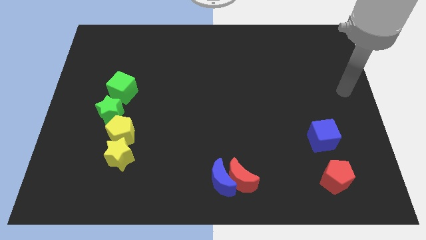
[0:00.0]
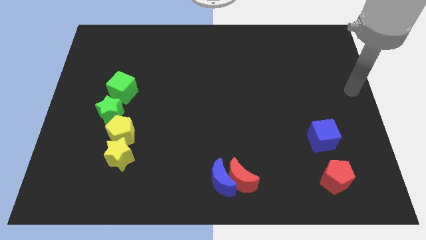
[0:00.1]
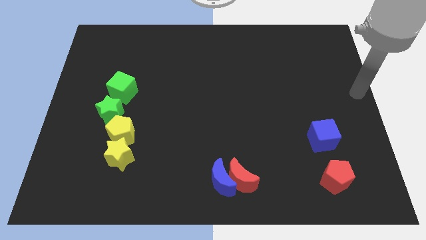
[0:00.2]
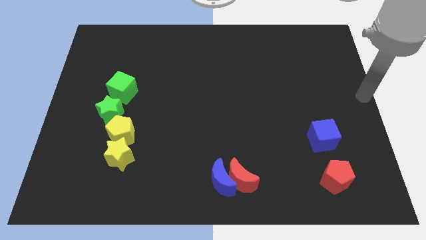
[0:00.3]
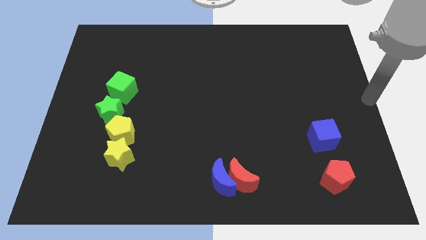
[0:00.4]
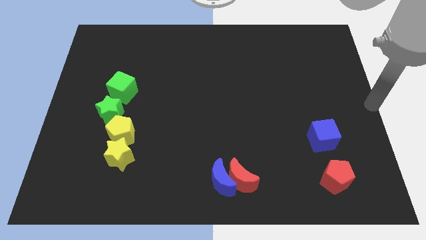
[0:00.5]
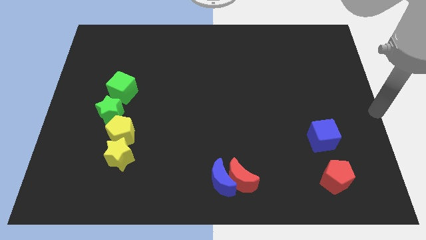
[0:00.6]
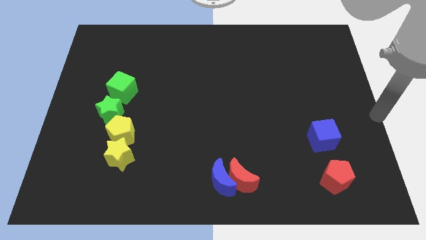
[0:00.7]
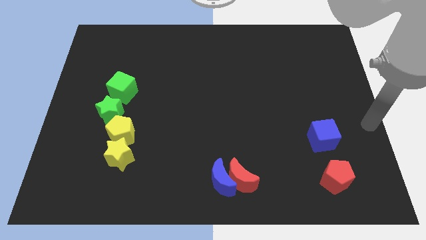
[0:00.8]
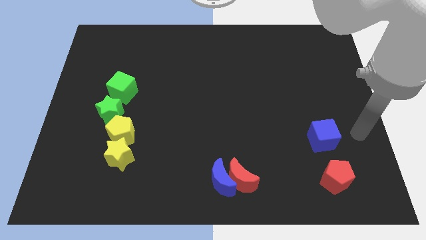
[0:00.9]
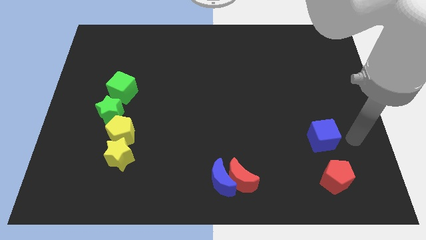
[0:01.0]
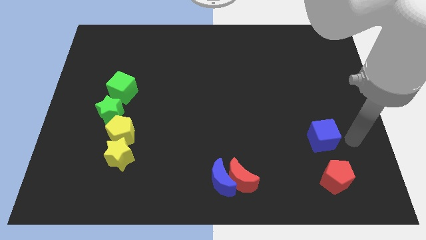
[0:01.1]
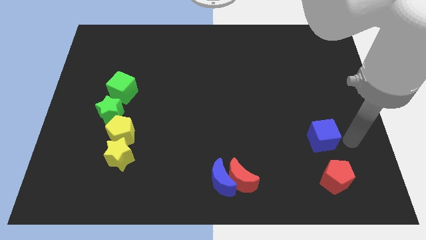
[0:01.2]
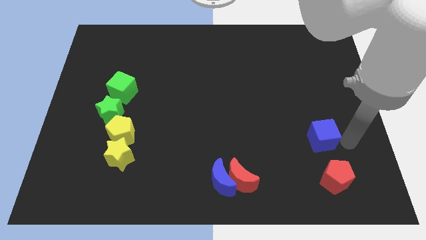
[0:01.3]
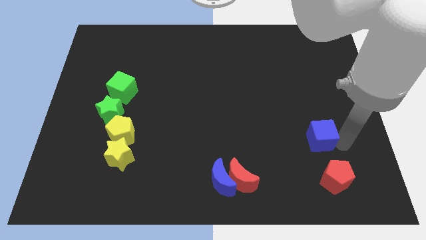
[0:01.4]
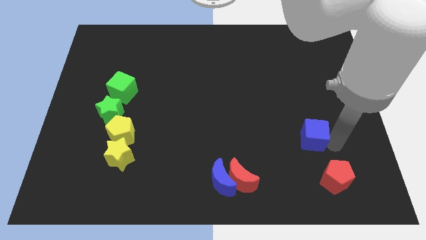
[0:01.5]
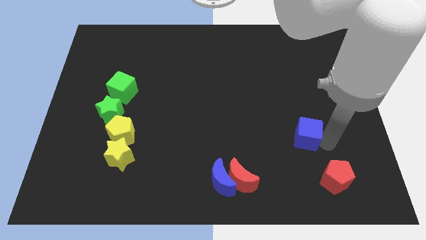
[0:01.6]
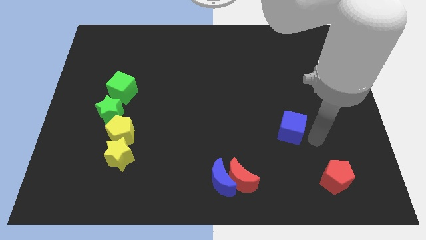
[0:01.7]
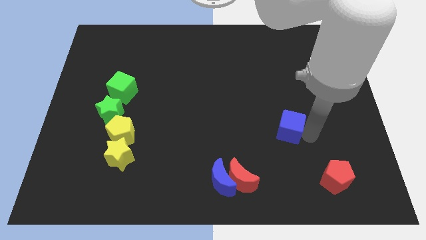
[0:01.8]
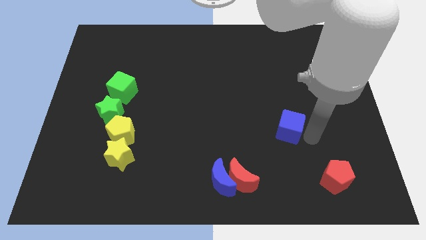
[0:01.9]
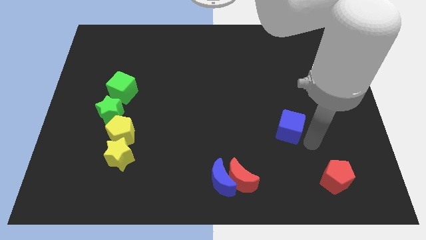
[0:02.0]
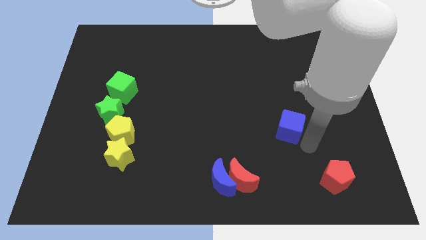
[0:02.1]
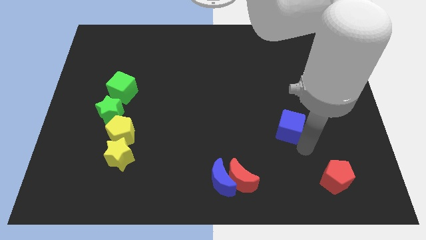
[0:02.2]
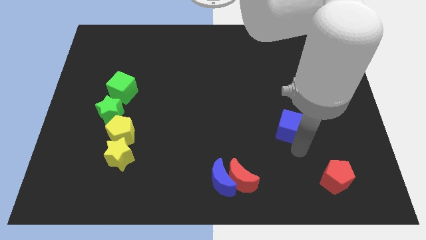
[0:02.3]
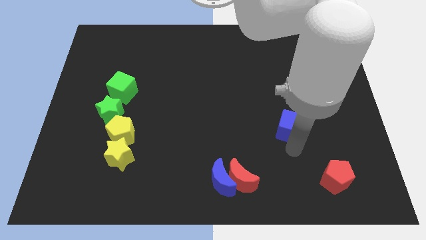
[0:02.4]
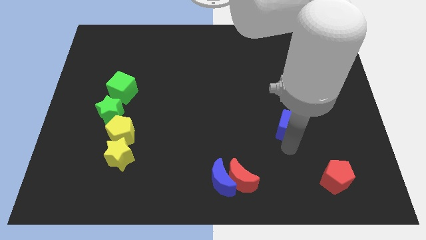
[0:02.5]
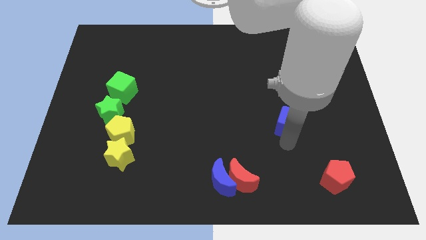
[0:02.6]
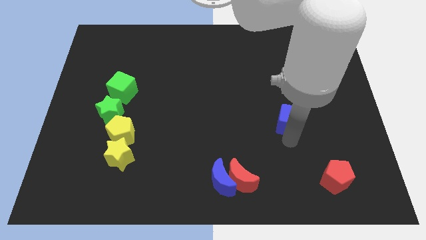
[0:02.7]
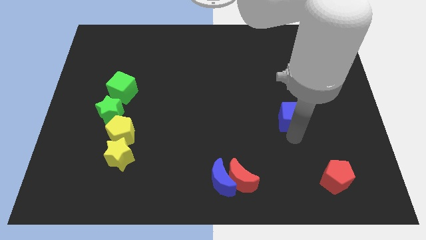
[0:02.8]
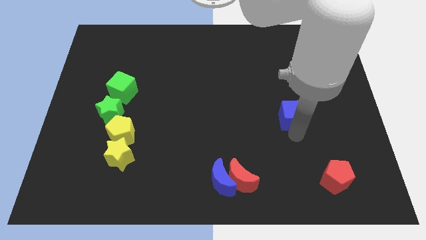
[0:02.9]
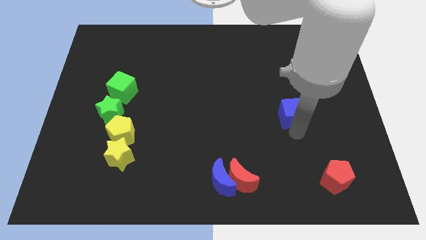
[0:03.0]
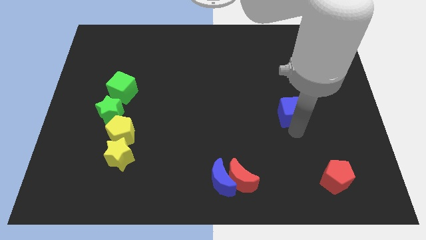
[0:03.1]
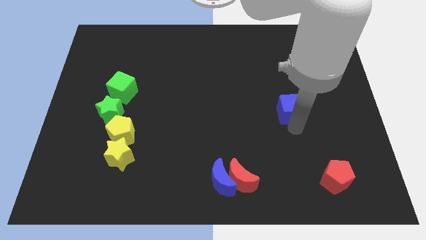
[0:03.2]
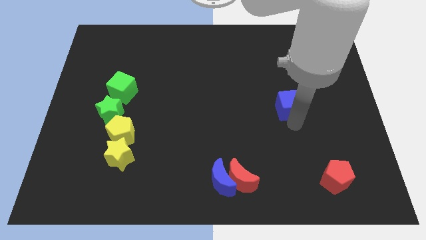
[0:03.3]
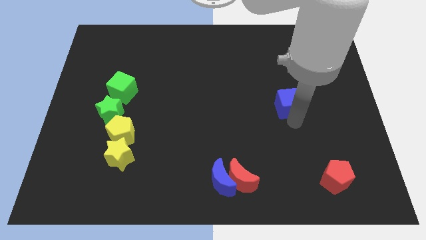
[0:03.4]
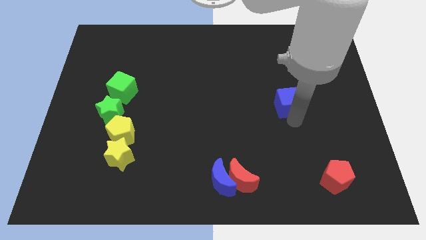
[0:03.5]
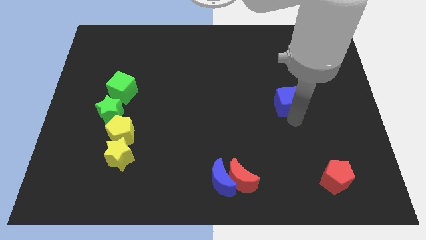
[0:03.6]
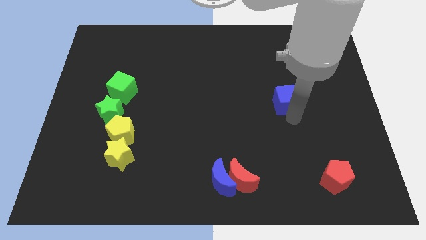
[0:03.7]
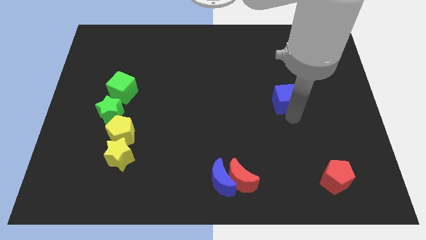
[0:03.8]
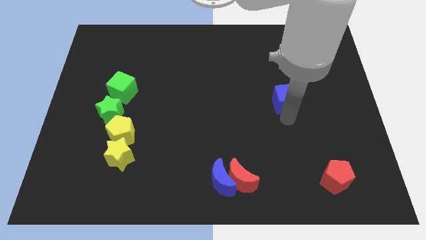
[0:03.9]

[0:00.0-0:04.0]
push the blue cube towards up

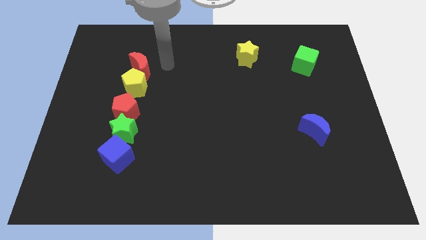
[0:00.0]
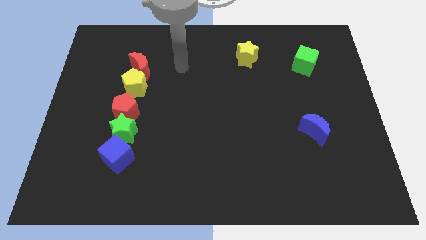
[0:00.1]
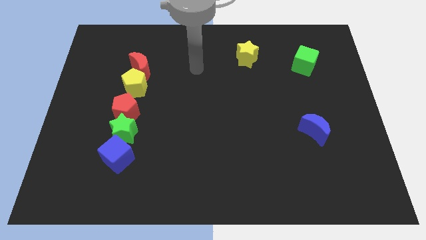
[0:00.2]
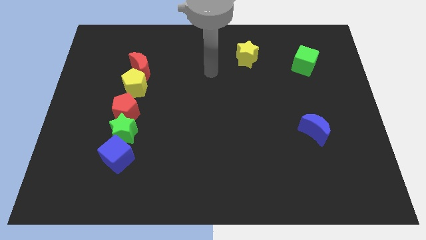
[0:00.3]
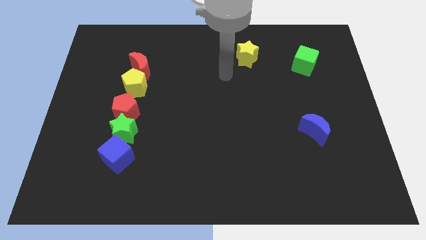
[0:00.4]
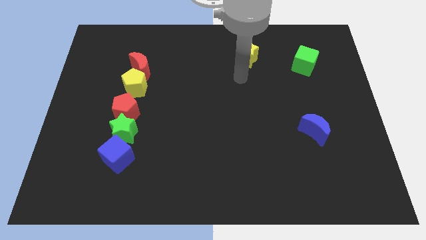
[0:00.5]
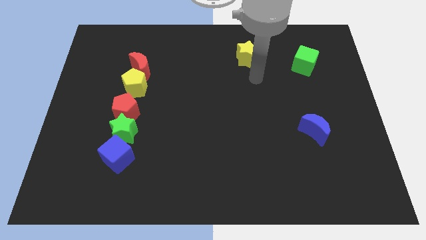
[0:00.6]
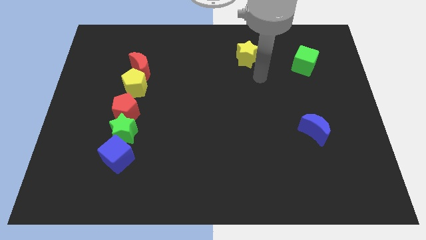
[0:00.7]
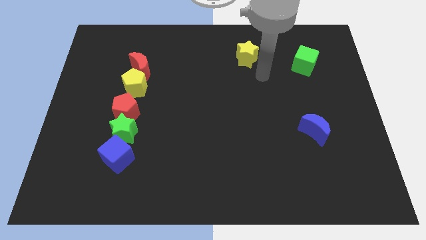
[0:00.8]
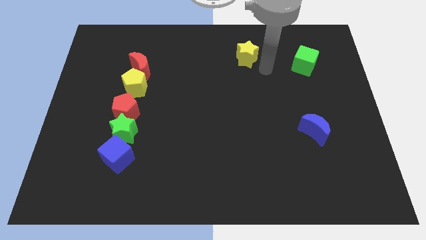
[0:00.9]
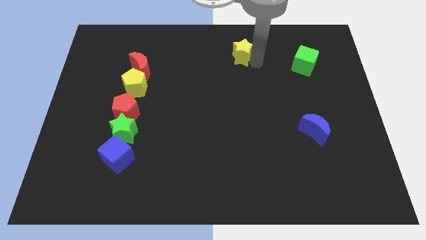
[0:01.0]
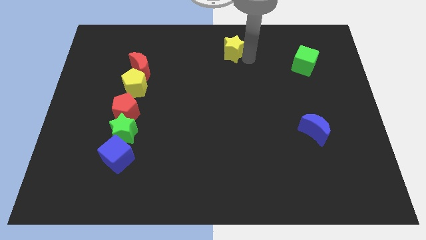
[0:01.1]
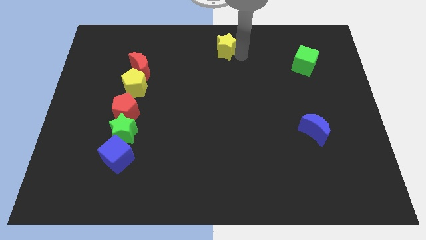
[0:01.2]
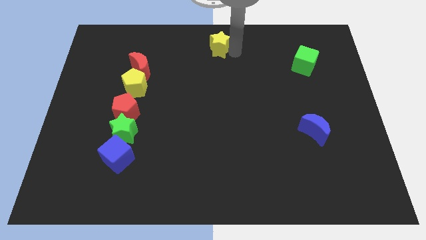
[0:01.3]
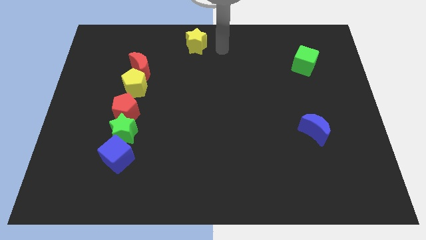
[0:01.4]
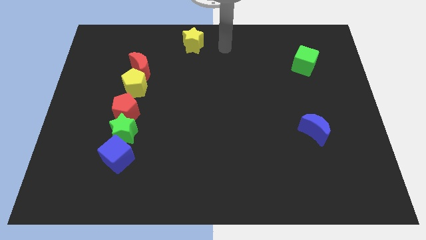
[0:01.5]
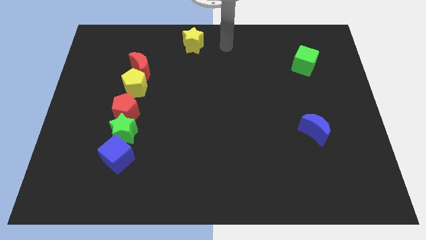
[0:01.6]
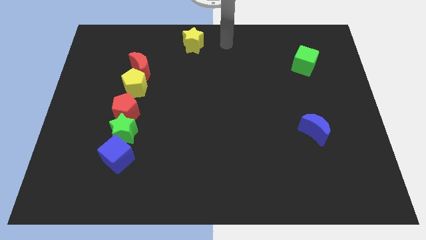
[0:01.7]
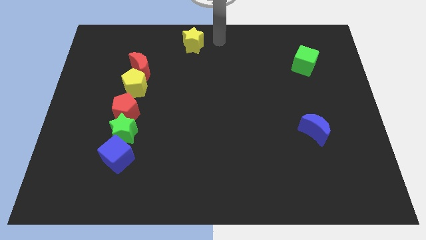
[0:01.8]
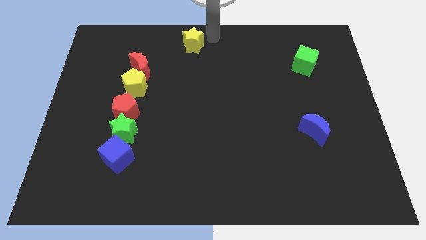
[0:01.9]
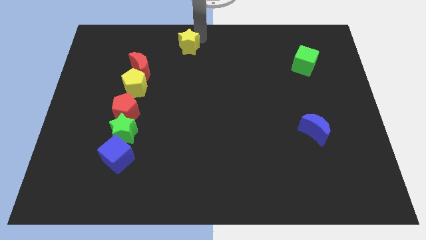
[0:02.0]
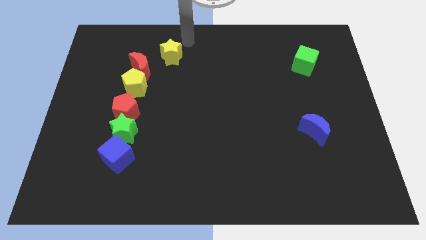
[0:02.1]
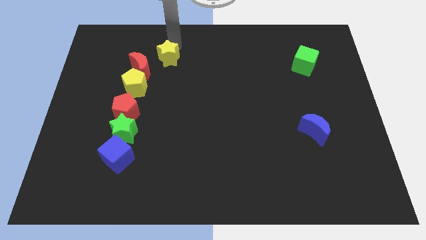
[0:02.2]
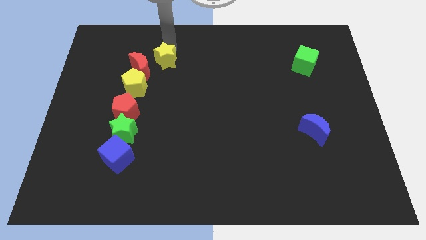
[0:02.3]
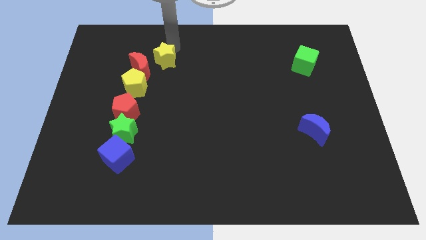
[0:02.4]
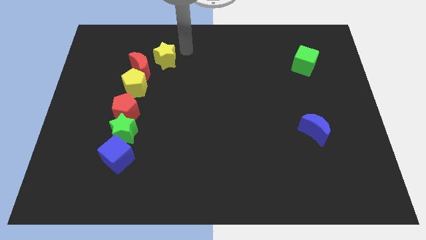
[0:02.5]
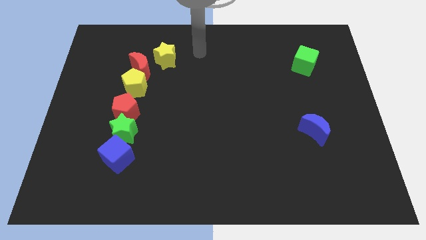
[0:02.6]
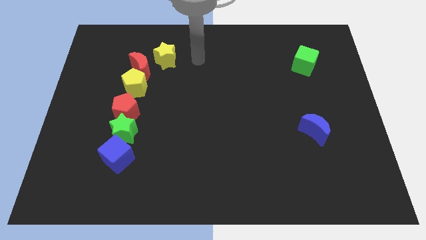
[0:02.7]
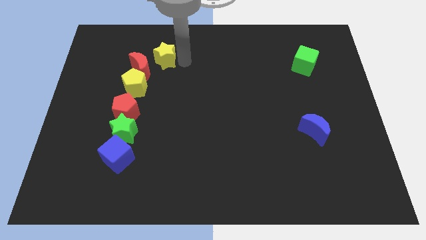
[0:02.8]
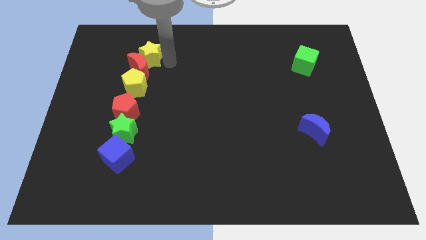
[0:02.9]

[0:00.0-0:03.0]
push the yellow star to the top right of the red crescent

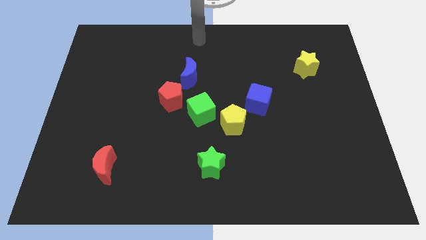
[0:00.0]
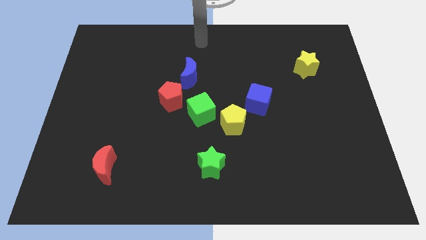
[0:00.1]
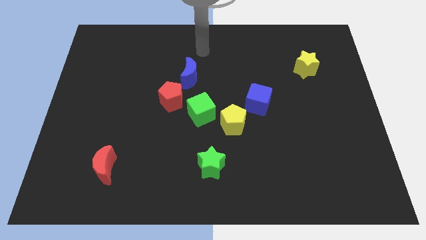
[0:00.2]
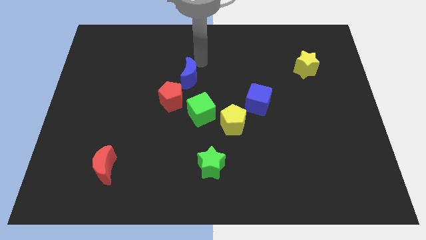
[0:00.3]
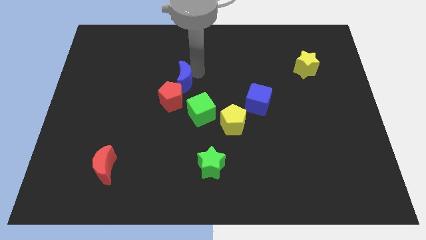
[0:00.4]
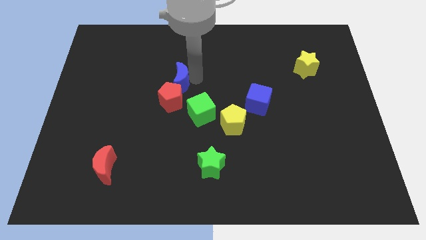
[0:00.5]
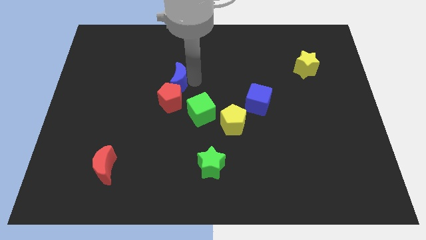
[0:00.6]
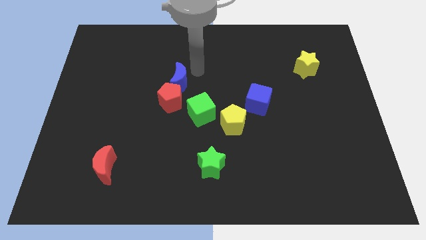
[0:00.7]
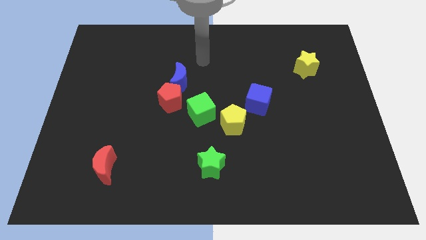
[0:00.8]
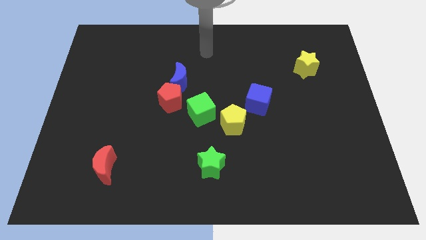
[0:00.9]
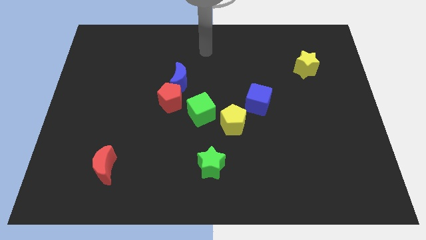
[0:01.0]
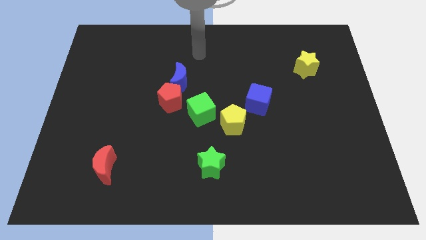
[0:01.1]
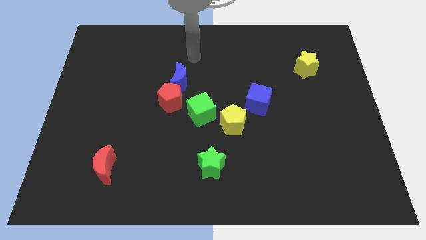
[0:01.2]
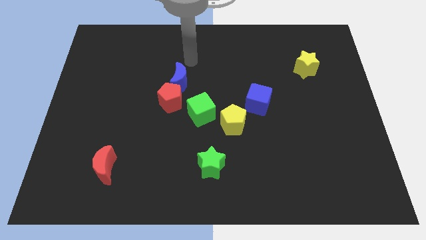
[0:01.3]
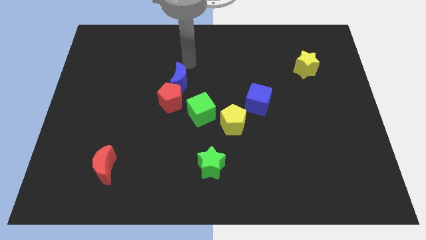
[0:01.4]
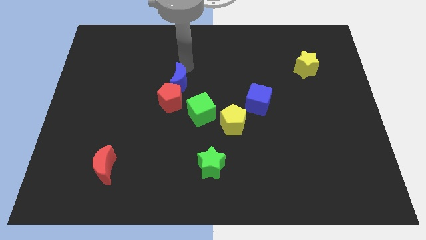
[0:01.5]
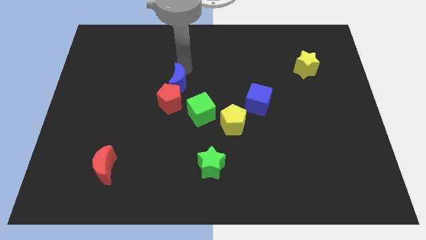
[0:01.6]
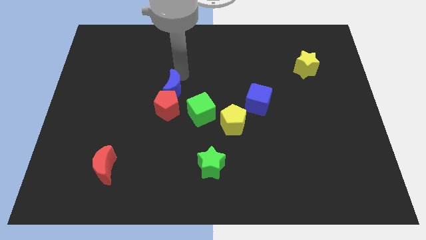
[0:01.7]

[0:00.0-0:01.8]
push the blue crescent into the red pentagon
